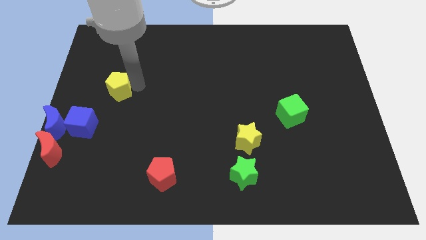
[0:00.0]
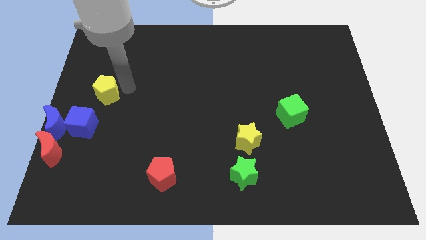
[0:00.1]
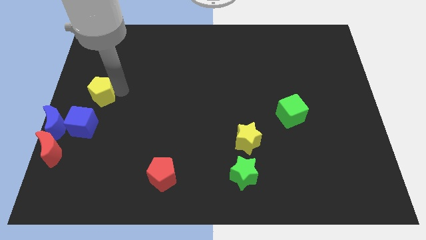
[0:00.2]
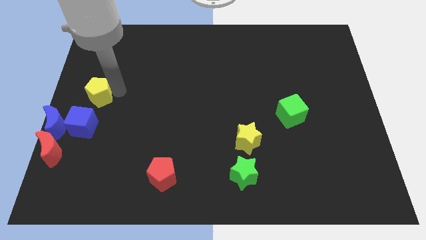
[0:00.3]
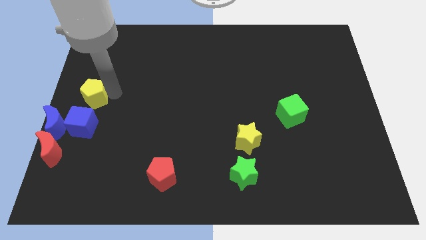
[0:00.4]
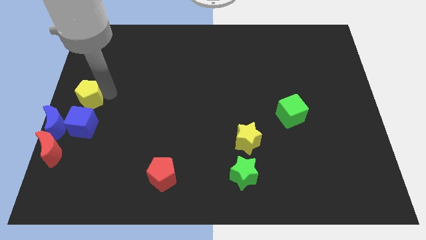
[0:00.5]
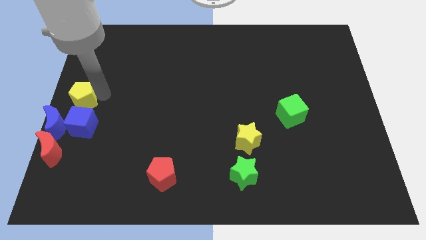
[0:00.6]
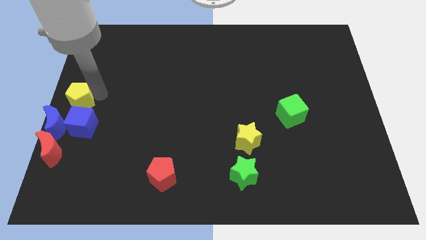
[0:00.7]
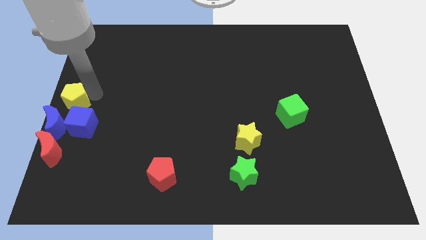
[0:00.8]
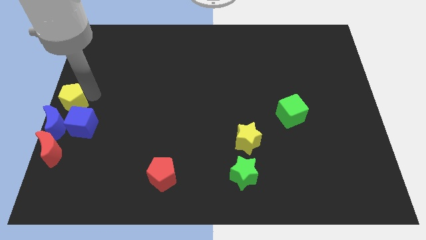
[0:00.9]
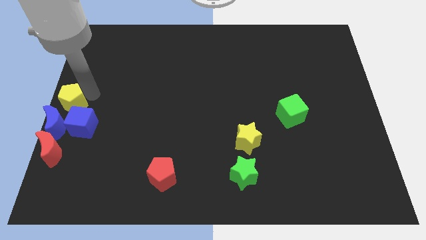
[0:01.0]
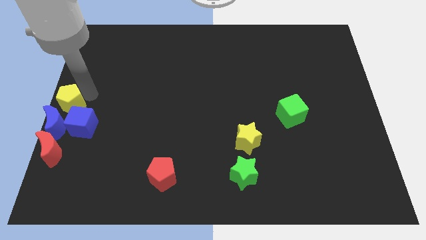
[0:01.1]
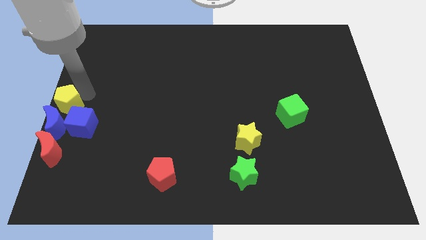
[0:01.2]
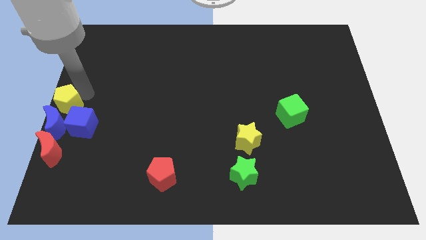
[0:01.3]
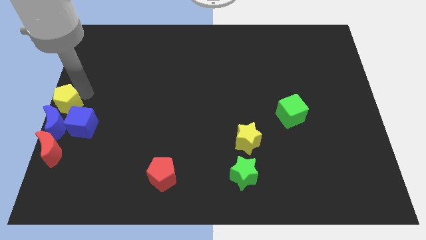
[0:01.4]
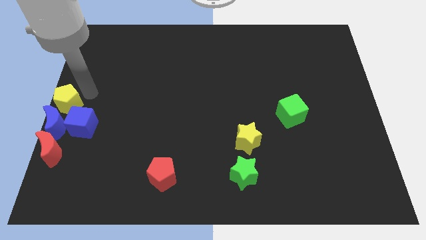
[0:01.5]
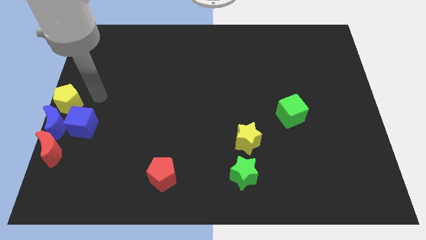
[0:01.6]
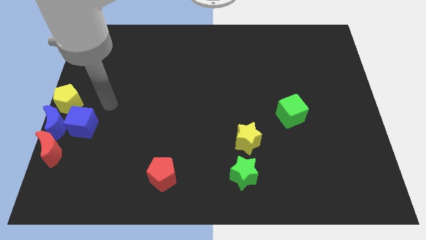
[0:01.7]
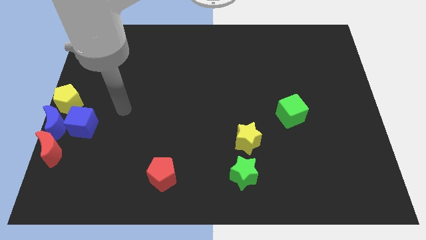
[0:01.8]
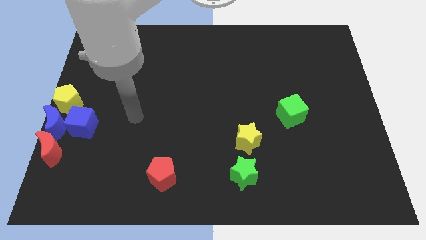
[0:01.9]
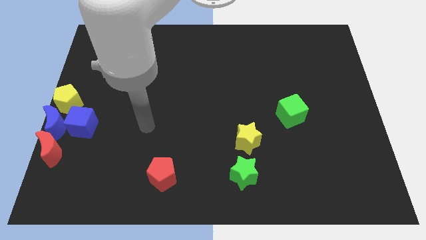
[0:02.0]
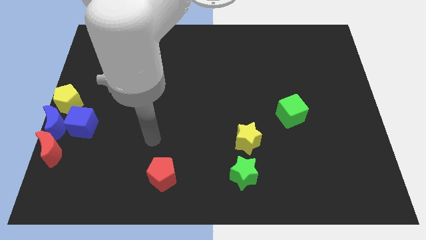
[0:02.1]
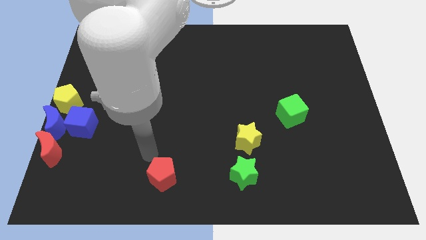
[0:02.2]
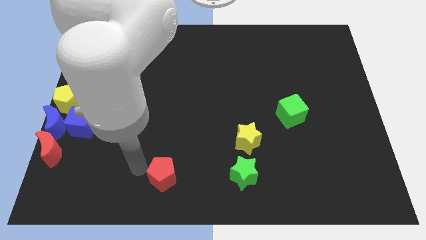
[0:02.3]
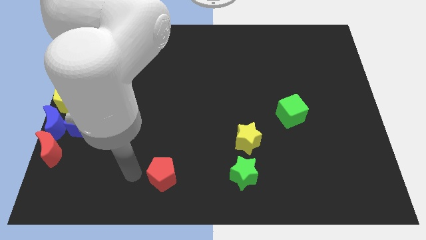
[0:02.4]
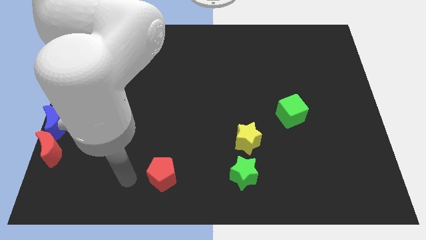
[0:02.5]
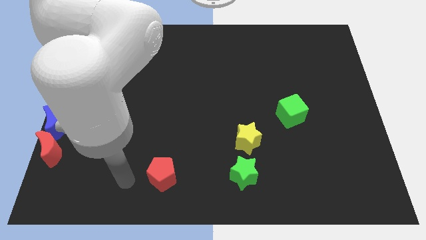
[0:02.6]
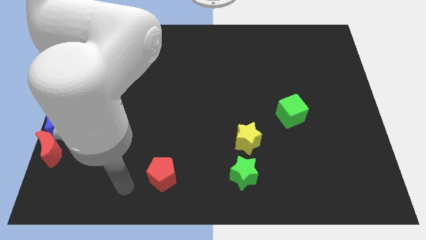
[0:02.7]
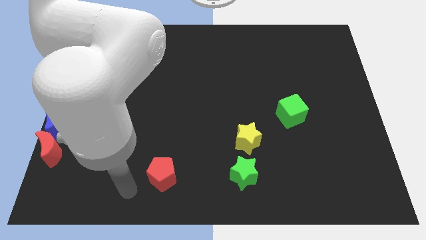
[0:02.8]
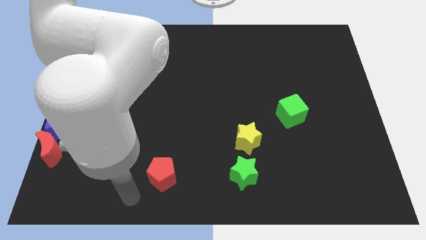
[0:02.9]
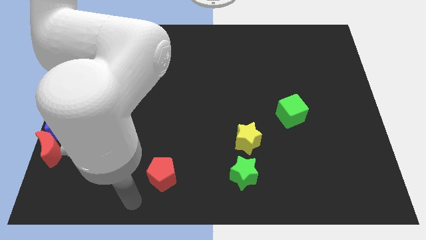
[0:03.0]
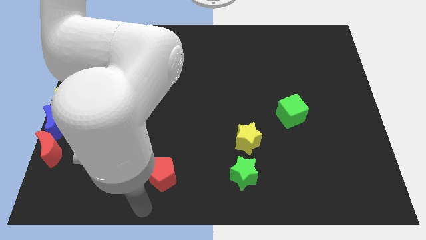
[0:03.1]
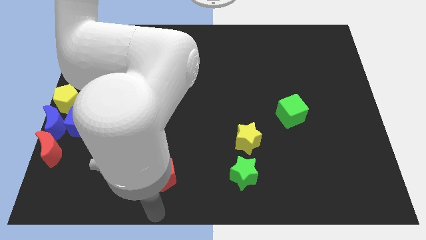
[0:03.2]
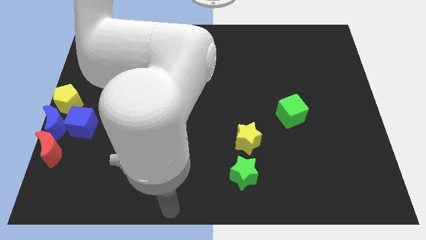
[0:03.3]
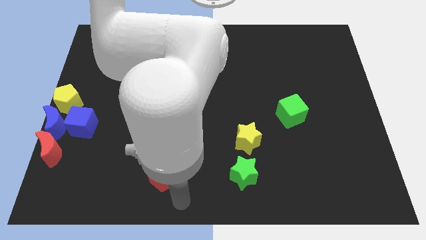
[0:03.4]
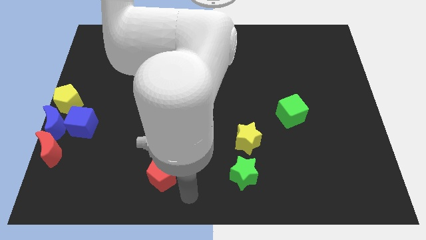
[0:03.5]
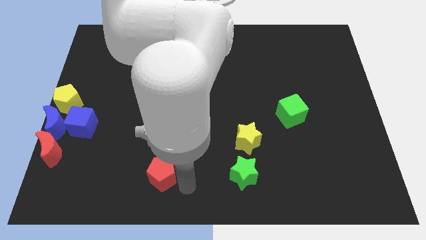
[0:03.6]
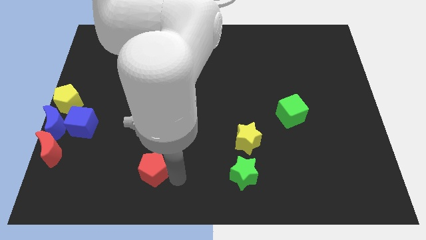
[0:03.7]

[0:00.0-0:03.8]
push the yellow pentagon to the top of the blue crescent

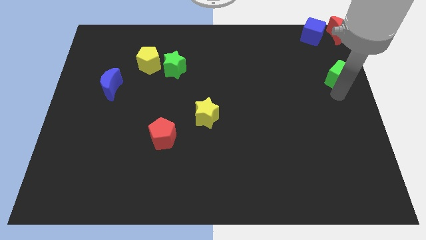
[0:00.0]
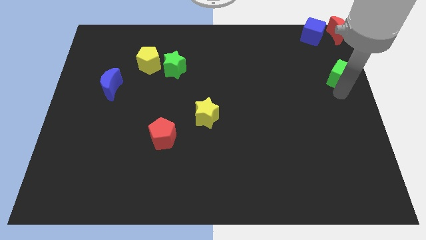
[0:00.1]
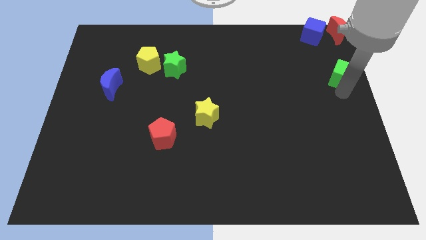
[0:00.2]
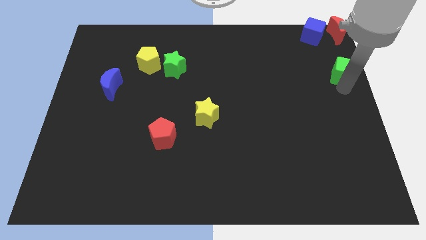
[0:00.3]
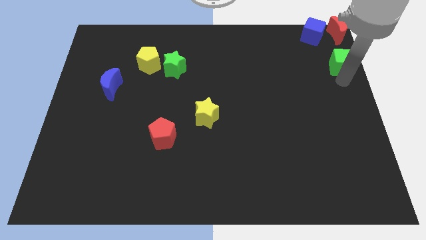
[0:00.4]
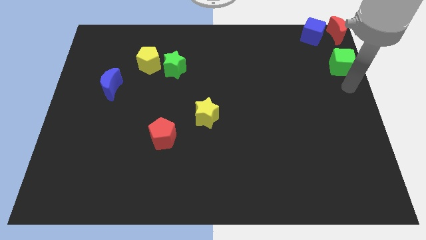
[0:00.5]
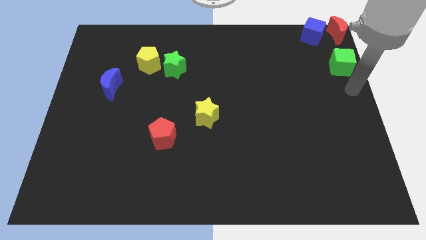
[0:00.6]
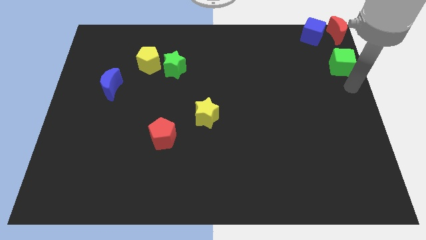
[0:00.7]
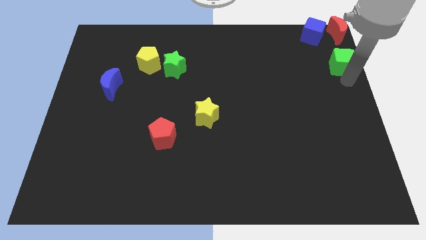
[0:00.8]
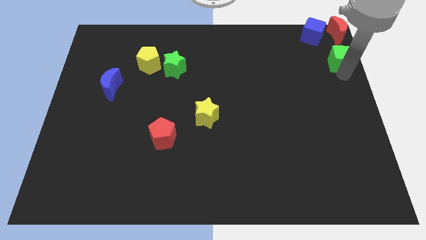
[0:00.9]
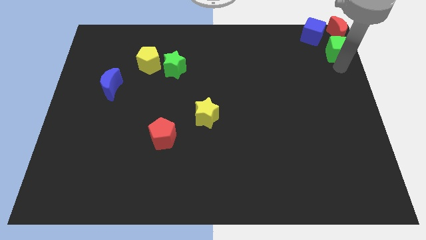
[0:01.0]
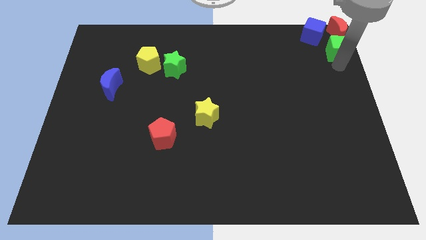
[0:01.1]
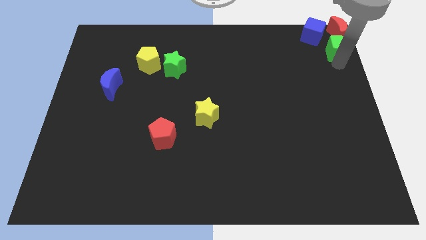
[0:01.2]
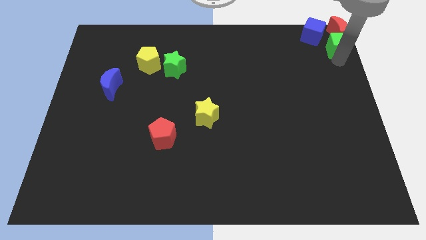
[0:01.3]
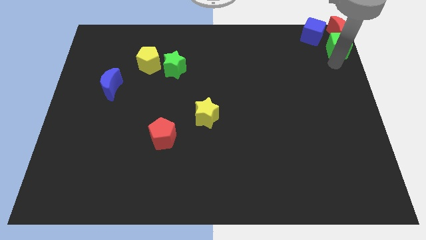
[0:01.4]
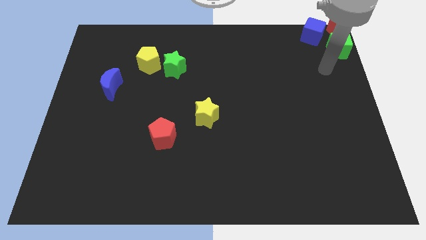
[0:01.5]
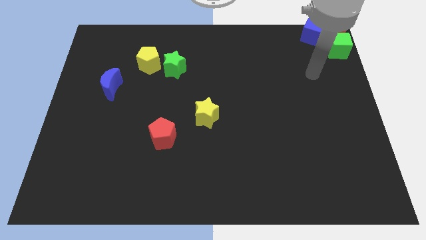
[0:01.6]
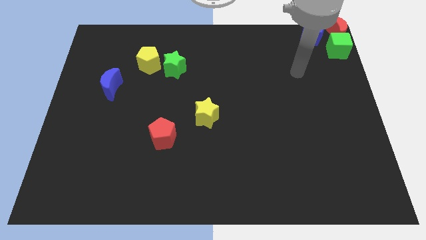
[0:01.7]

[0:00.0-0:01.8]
push the green cube into the bottom of the red moon

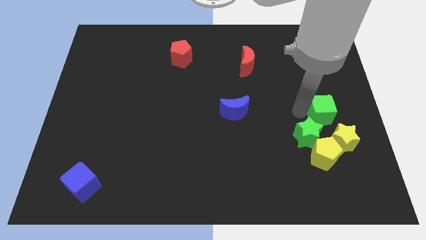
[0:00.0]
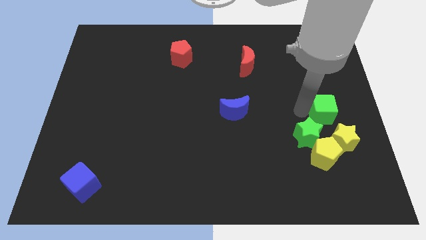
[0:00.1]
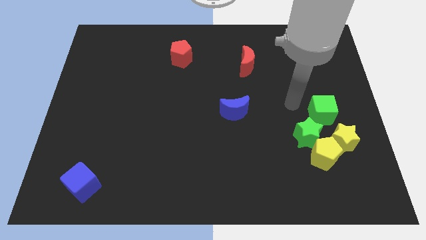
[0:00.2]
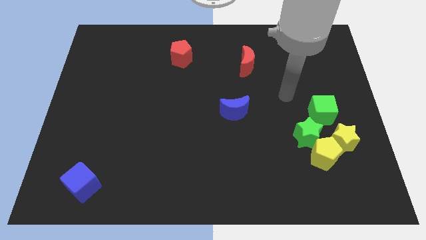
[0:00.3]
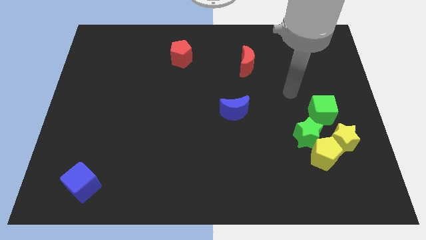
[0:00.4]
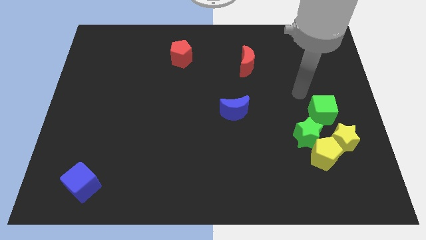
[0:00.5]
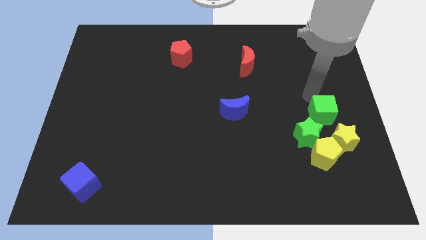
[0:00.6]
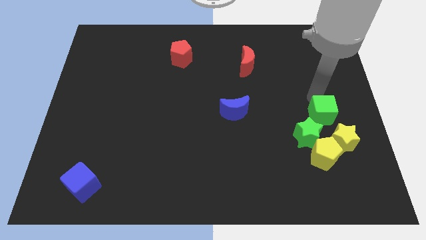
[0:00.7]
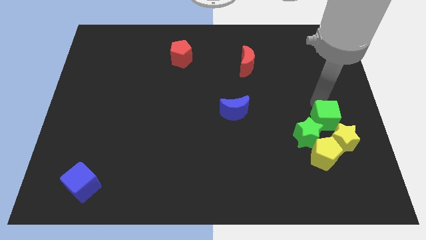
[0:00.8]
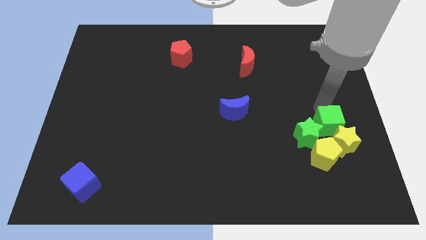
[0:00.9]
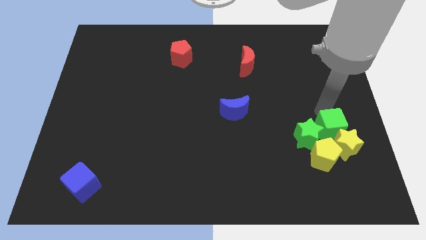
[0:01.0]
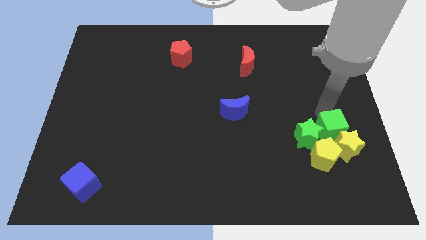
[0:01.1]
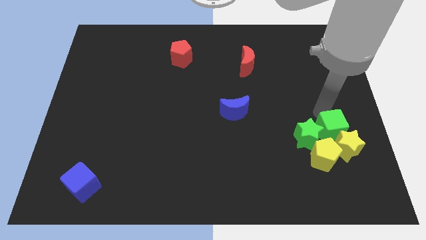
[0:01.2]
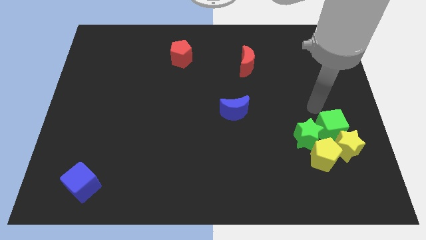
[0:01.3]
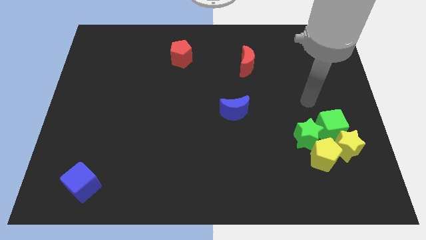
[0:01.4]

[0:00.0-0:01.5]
move the green cube into the yellow star

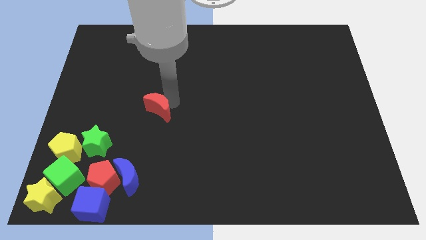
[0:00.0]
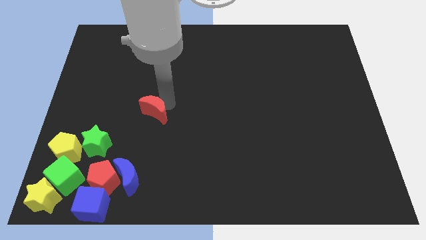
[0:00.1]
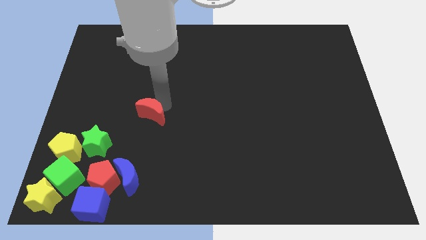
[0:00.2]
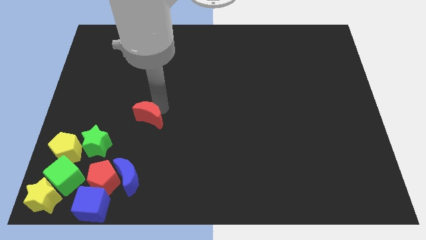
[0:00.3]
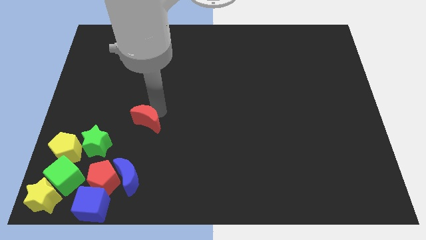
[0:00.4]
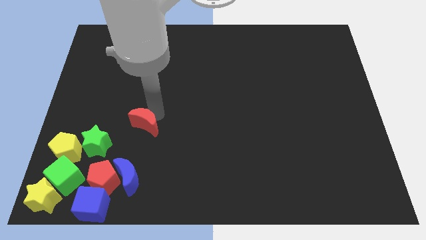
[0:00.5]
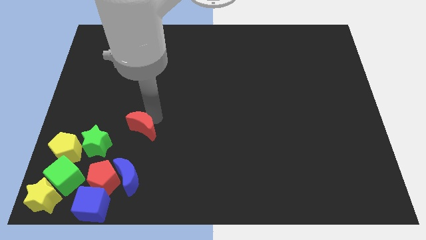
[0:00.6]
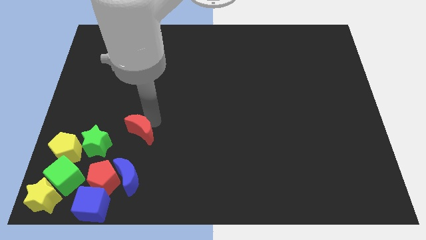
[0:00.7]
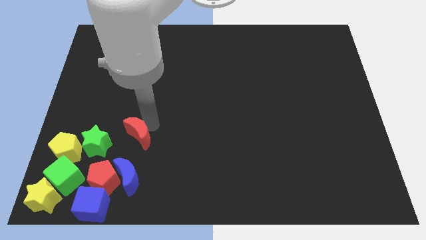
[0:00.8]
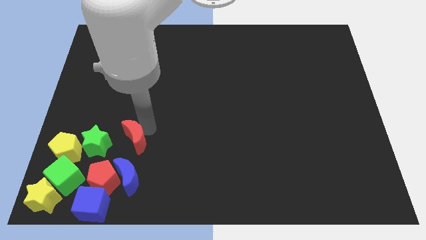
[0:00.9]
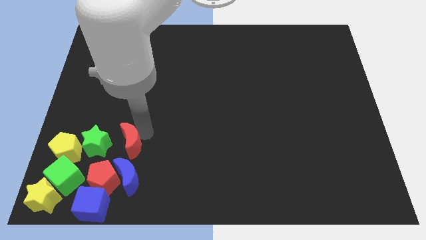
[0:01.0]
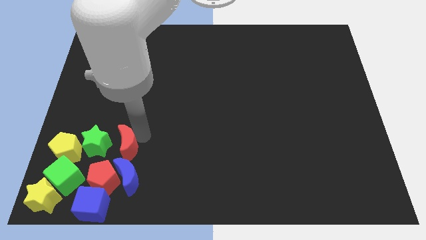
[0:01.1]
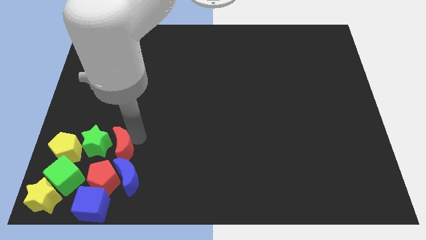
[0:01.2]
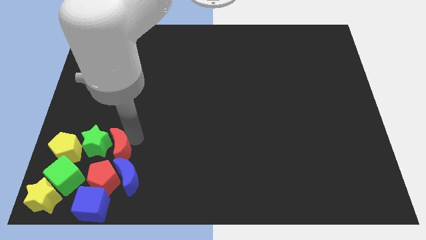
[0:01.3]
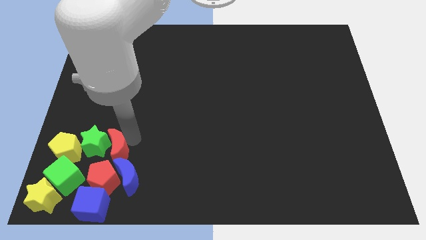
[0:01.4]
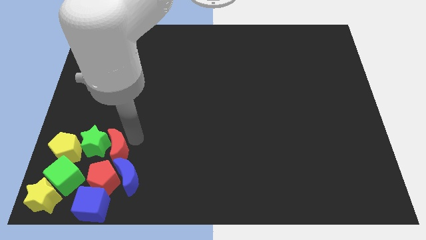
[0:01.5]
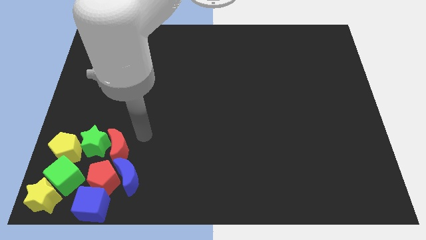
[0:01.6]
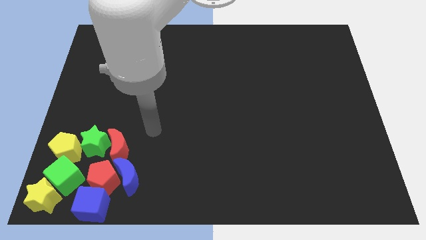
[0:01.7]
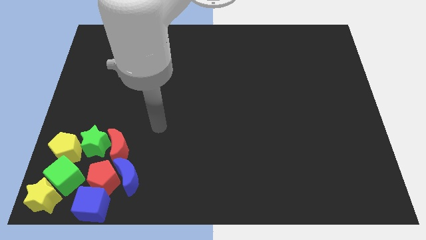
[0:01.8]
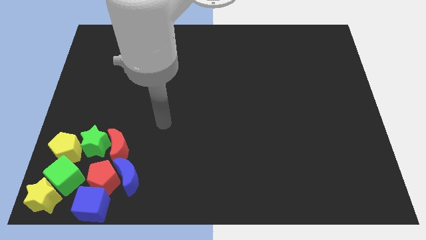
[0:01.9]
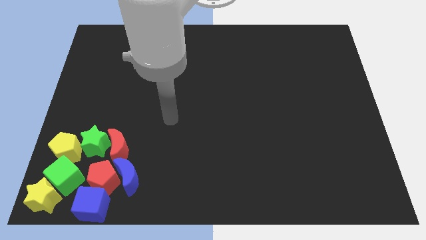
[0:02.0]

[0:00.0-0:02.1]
move red crescent into the group of blocks
